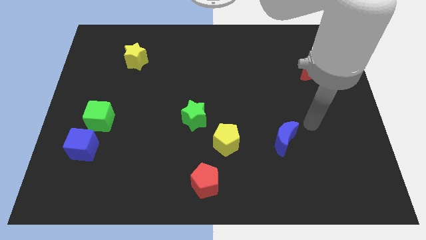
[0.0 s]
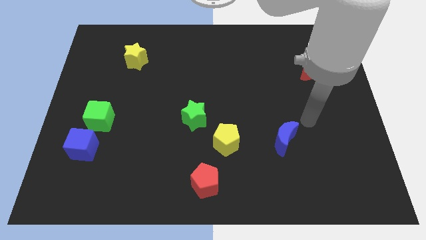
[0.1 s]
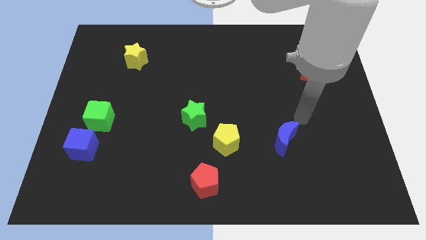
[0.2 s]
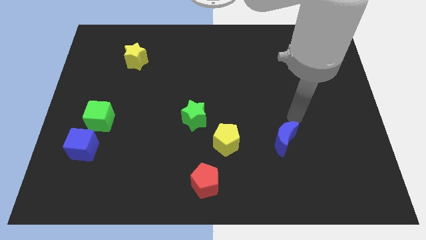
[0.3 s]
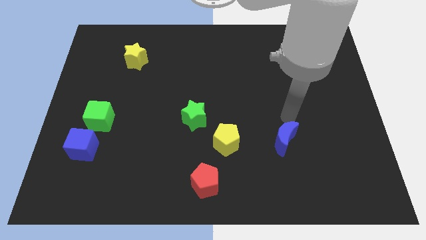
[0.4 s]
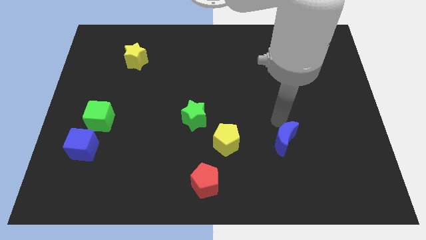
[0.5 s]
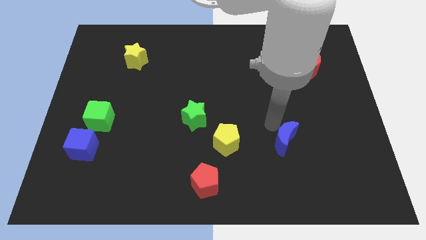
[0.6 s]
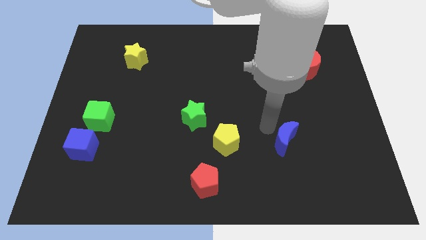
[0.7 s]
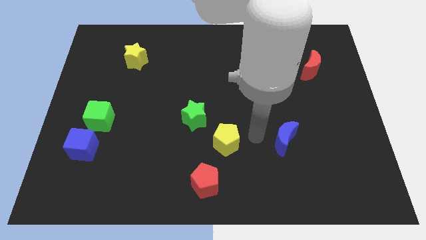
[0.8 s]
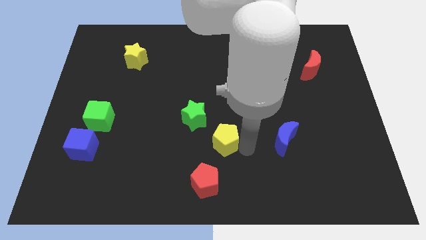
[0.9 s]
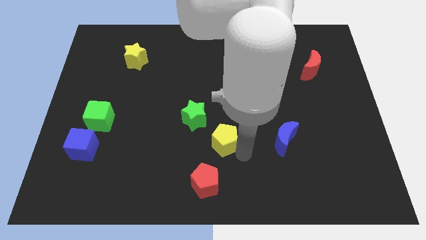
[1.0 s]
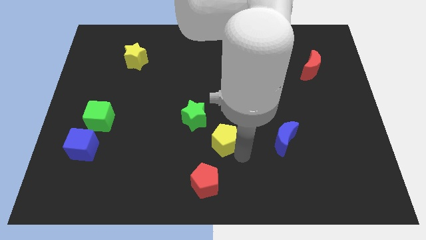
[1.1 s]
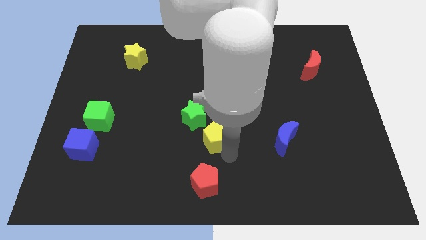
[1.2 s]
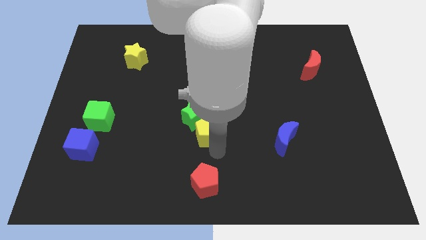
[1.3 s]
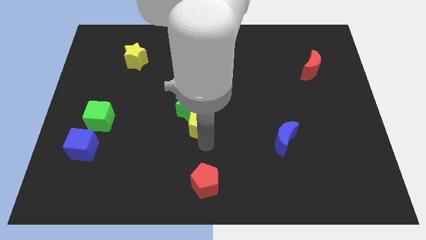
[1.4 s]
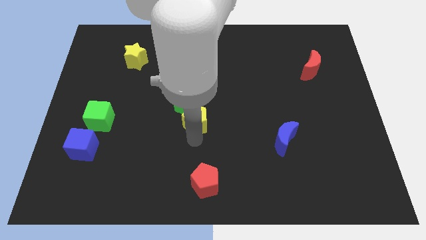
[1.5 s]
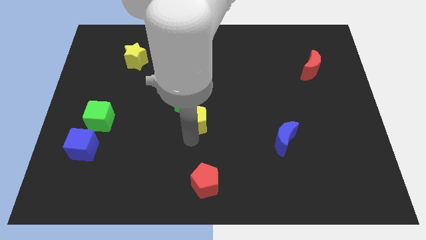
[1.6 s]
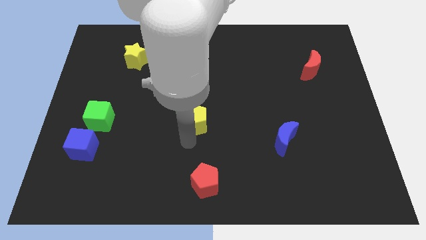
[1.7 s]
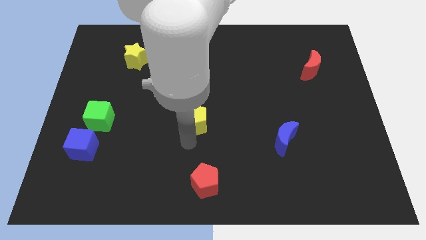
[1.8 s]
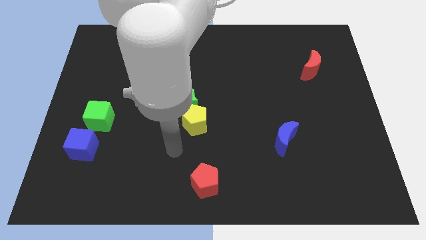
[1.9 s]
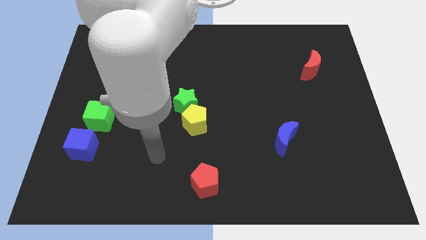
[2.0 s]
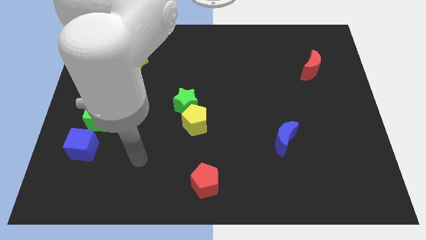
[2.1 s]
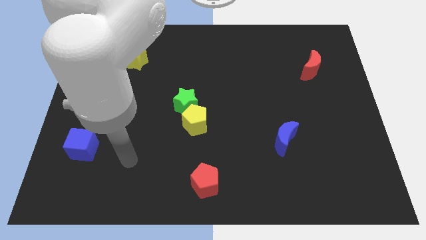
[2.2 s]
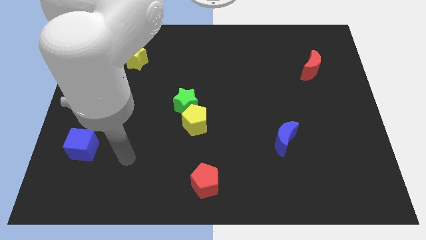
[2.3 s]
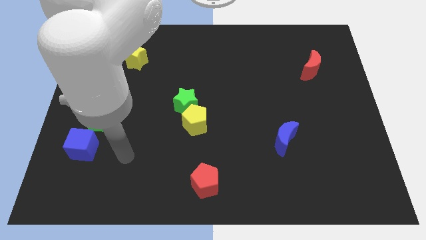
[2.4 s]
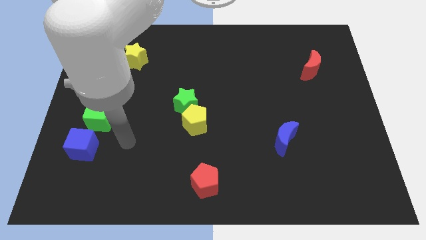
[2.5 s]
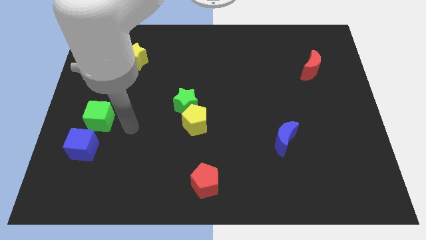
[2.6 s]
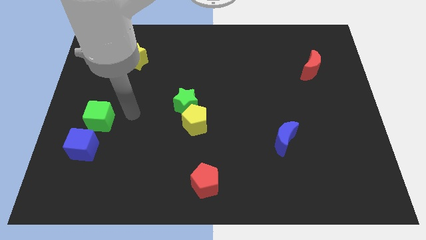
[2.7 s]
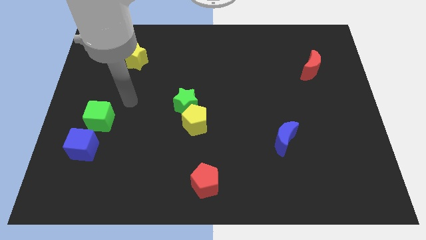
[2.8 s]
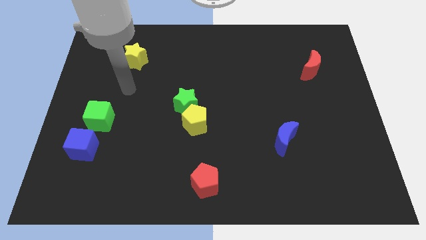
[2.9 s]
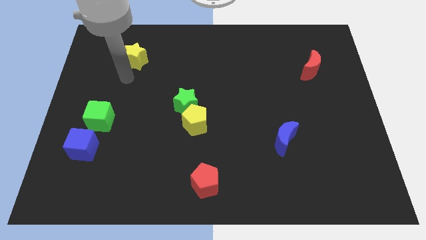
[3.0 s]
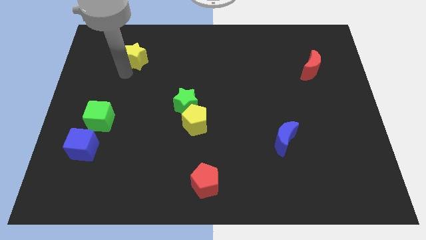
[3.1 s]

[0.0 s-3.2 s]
move the yellow pentagon close to the green star

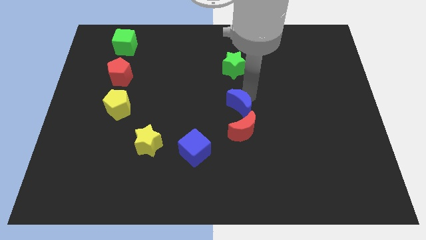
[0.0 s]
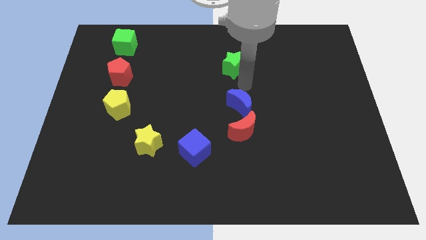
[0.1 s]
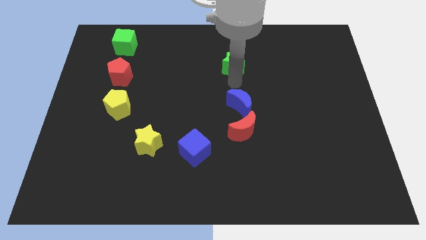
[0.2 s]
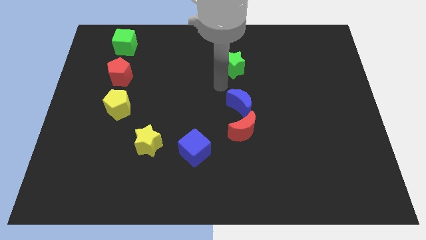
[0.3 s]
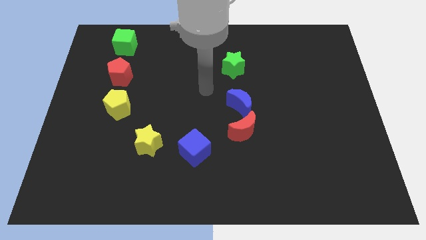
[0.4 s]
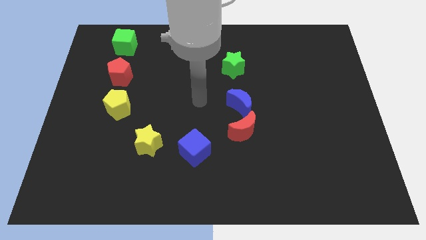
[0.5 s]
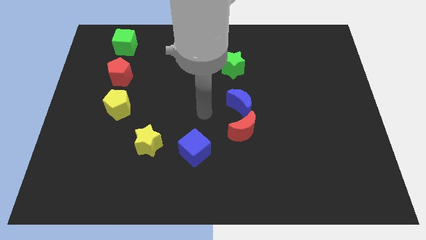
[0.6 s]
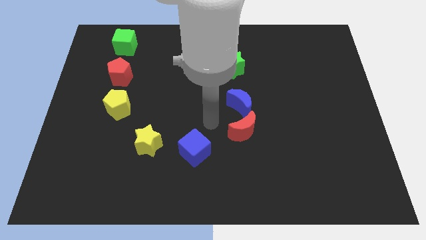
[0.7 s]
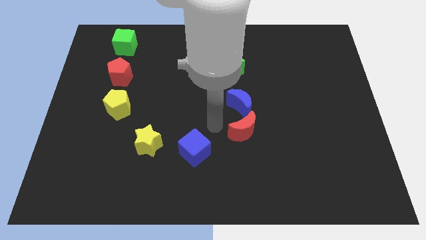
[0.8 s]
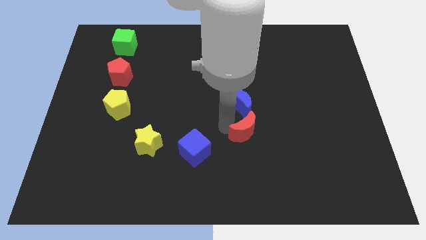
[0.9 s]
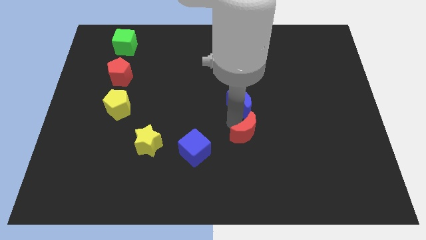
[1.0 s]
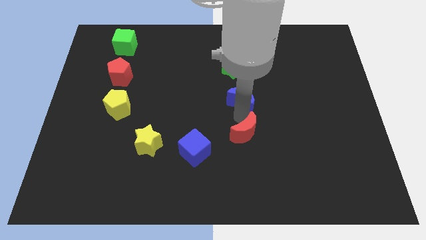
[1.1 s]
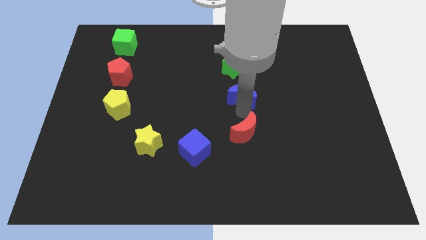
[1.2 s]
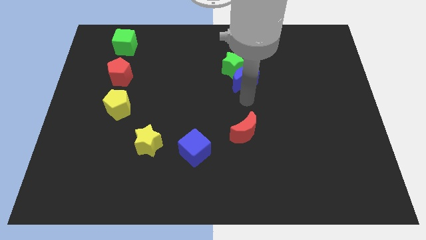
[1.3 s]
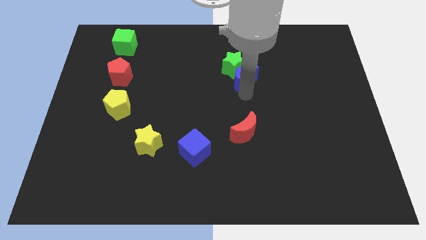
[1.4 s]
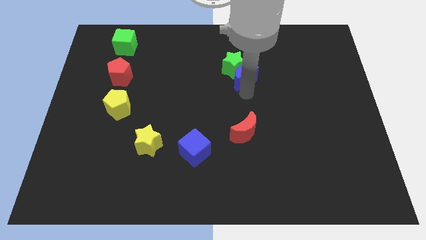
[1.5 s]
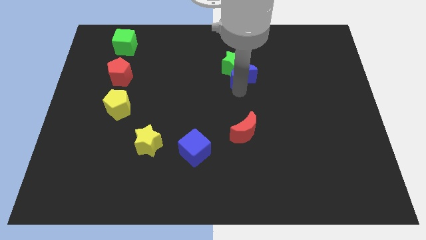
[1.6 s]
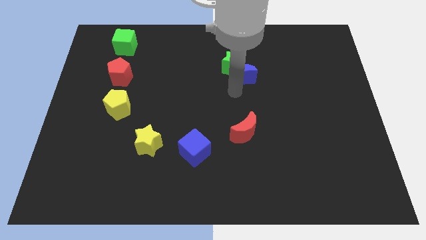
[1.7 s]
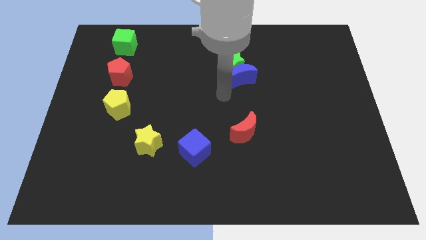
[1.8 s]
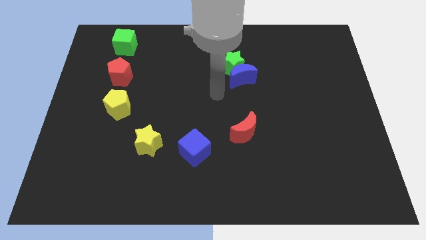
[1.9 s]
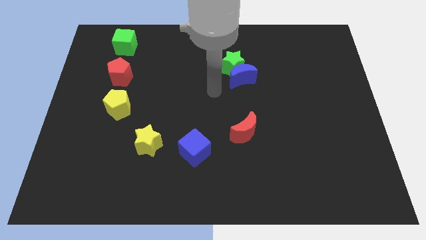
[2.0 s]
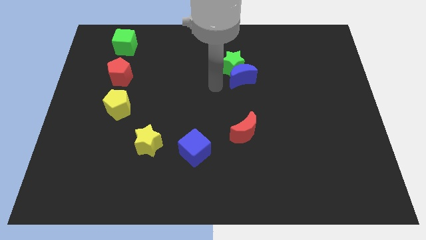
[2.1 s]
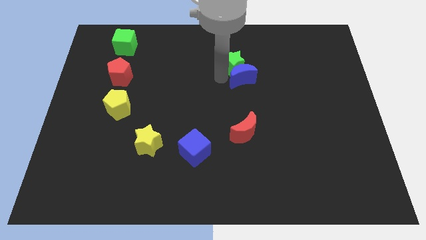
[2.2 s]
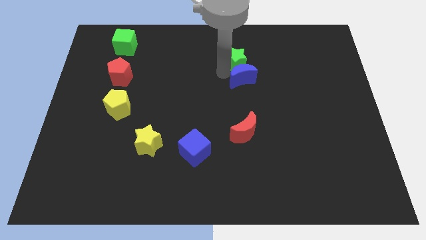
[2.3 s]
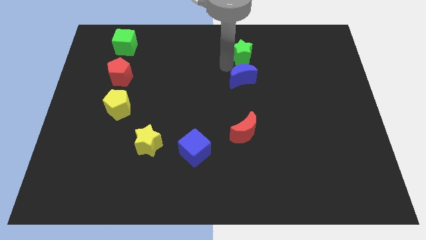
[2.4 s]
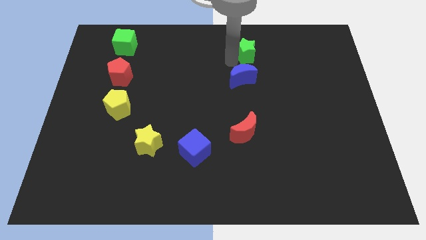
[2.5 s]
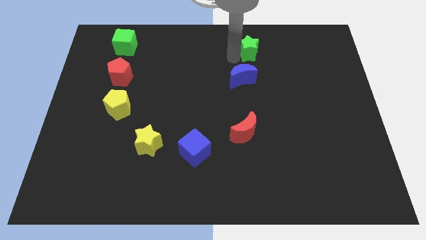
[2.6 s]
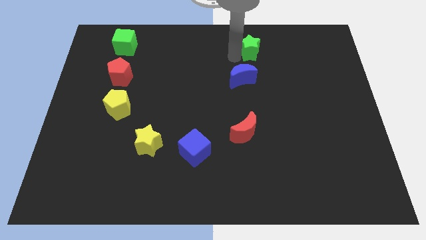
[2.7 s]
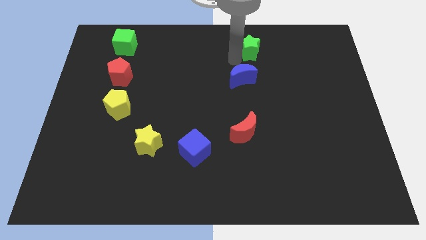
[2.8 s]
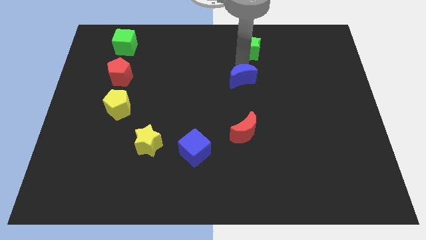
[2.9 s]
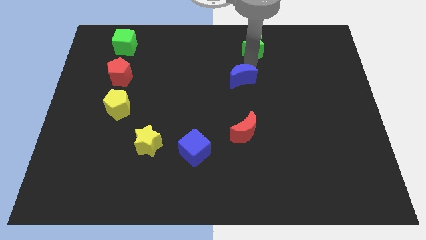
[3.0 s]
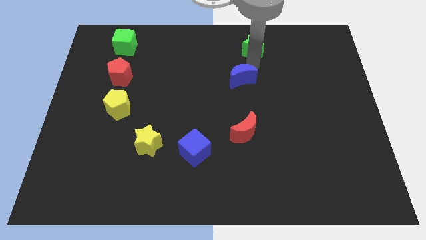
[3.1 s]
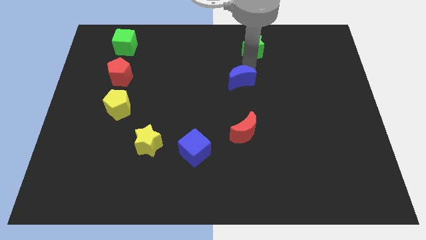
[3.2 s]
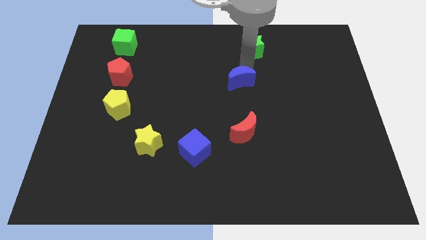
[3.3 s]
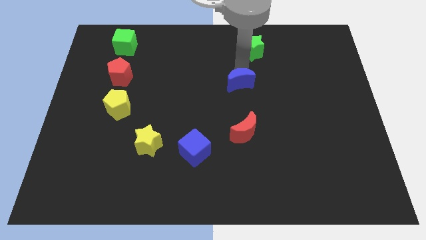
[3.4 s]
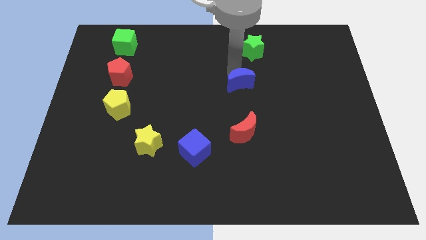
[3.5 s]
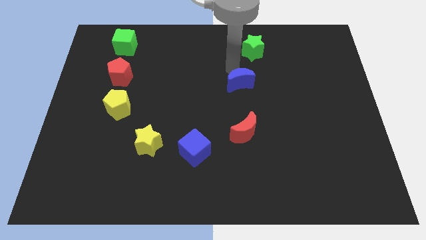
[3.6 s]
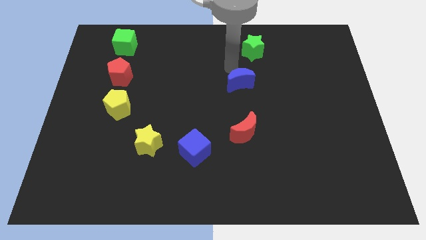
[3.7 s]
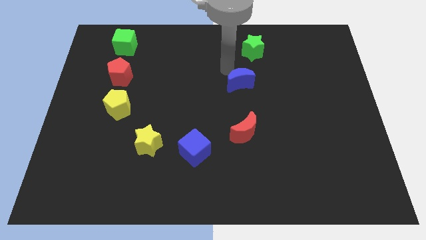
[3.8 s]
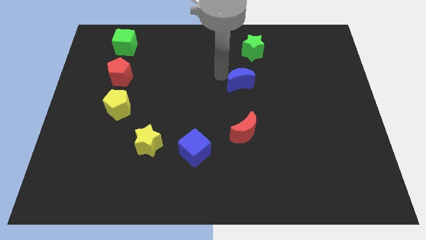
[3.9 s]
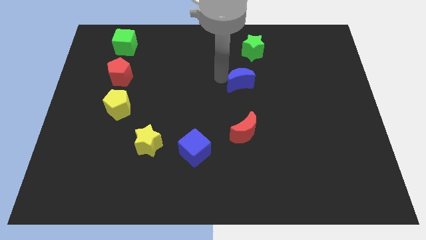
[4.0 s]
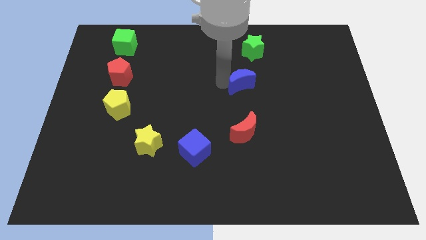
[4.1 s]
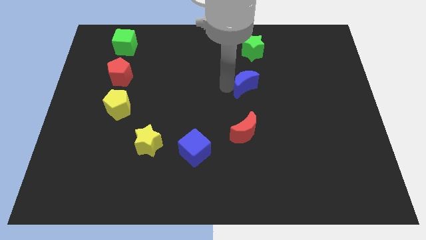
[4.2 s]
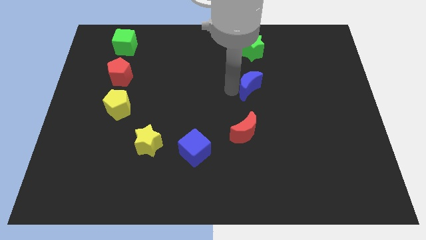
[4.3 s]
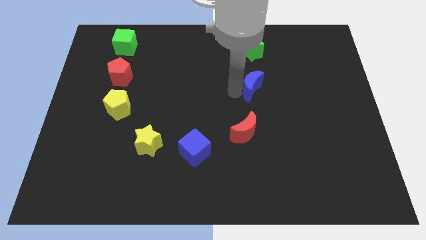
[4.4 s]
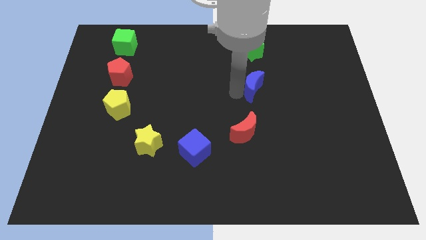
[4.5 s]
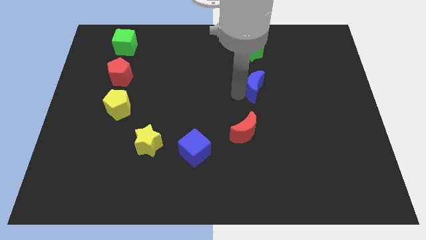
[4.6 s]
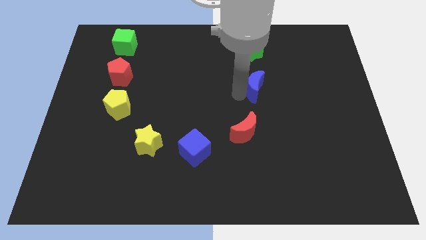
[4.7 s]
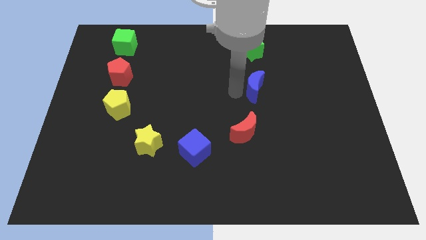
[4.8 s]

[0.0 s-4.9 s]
place blue moon in between red moon and green star

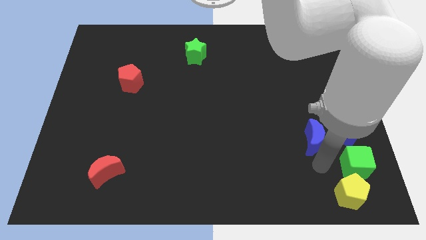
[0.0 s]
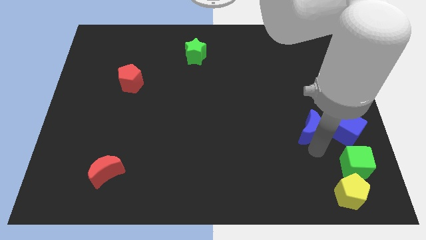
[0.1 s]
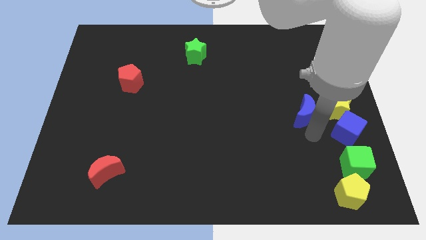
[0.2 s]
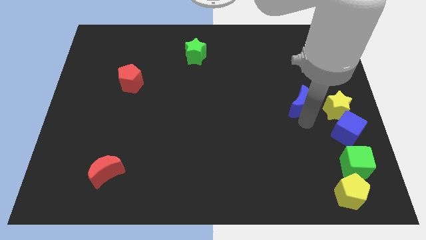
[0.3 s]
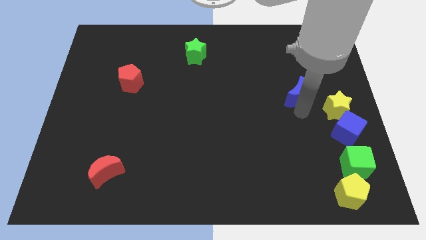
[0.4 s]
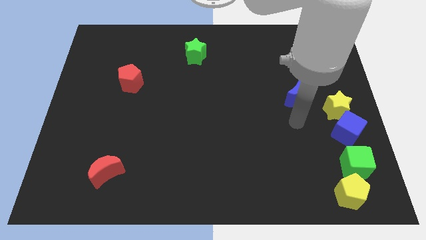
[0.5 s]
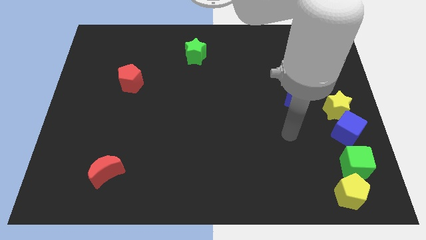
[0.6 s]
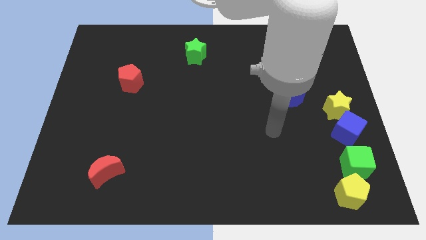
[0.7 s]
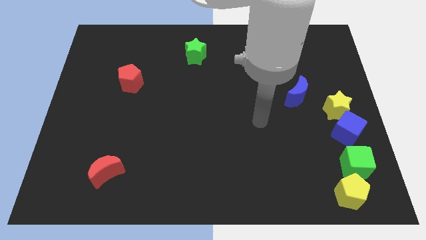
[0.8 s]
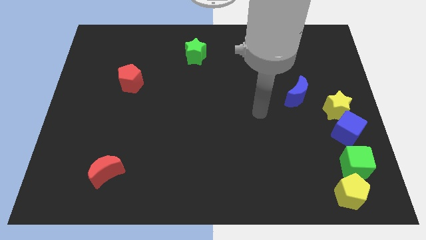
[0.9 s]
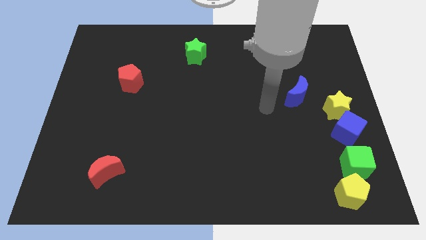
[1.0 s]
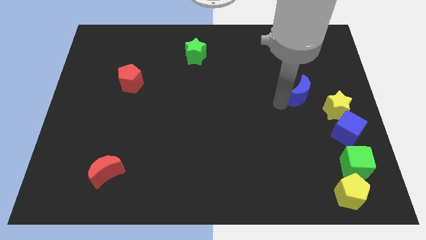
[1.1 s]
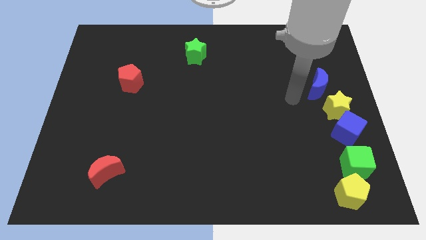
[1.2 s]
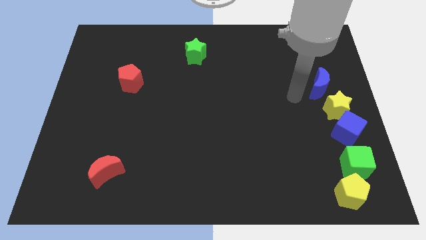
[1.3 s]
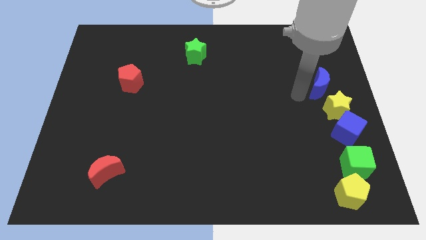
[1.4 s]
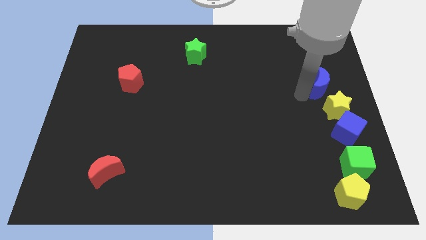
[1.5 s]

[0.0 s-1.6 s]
push the blue crescent towards the top of the yellow star
